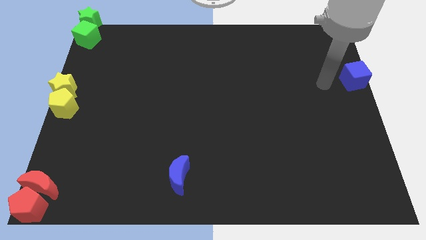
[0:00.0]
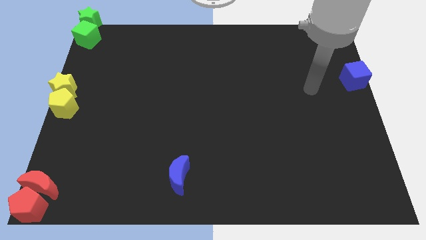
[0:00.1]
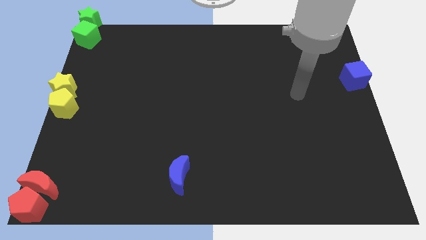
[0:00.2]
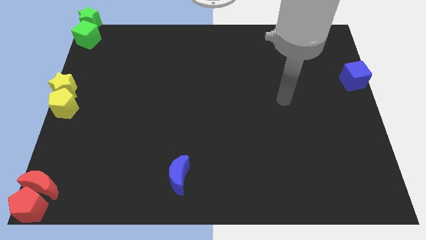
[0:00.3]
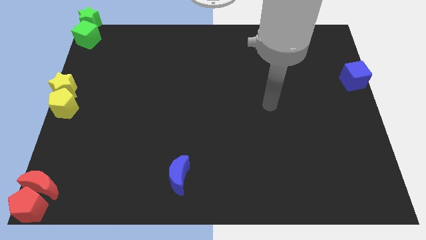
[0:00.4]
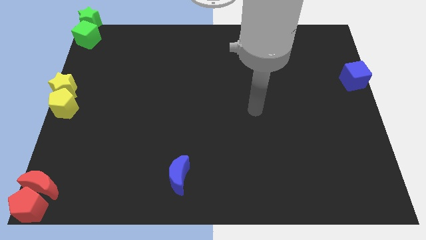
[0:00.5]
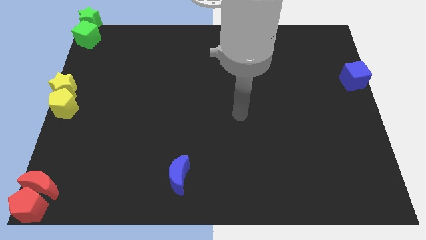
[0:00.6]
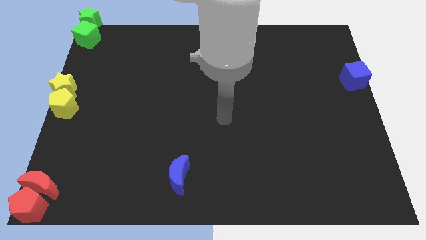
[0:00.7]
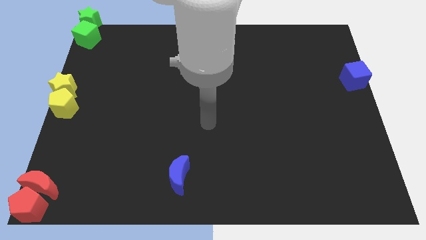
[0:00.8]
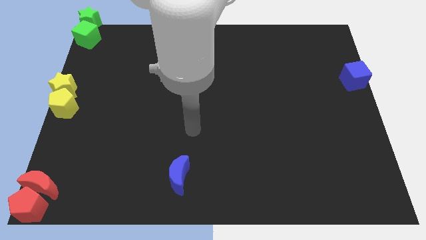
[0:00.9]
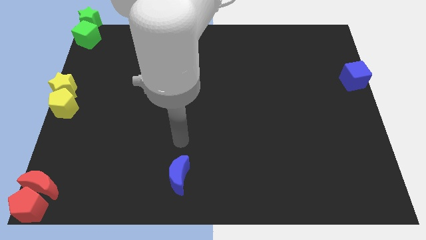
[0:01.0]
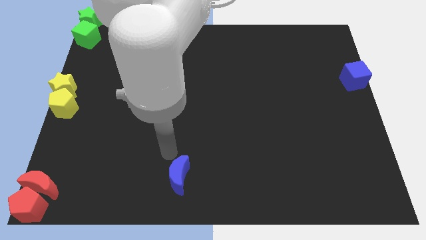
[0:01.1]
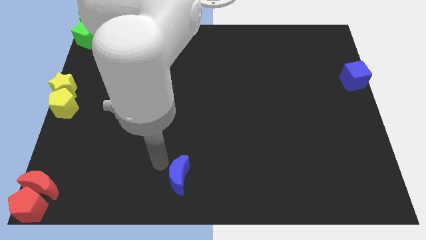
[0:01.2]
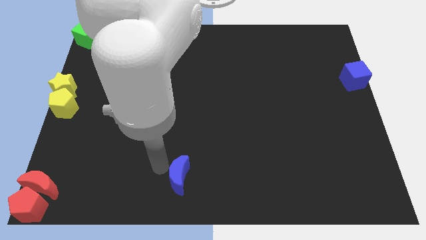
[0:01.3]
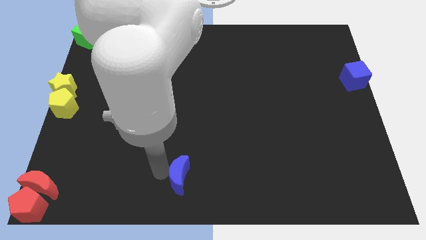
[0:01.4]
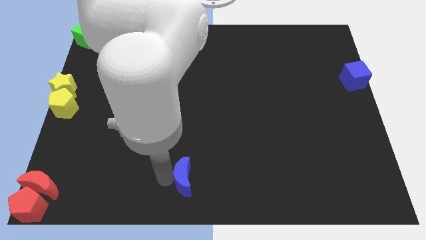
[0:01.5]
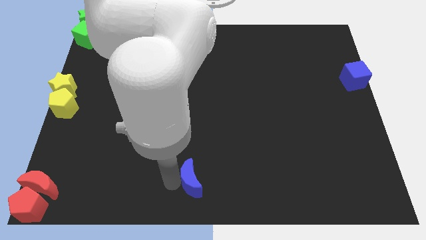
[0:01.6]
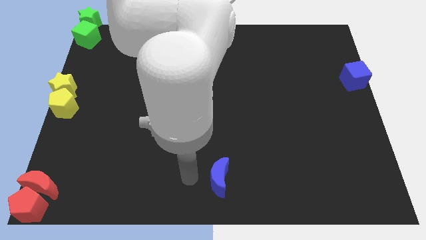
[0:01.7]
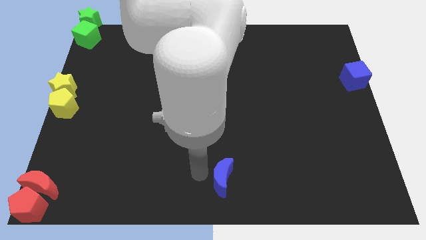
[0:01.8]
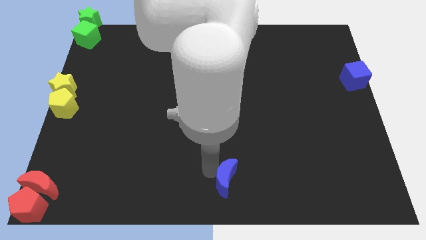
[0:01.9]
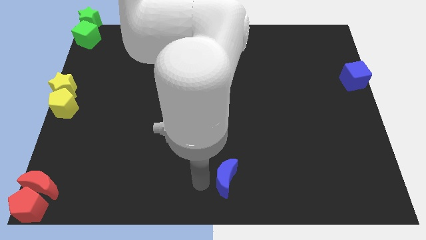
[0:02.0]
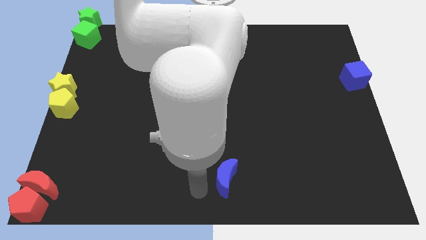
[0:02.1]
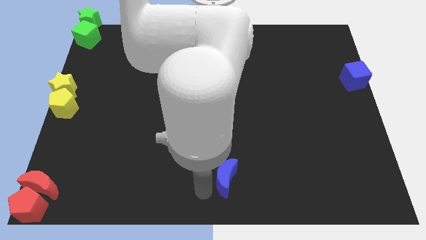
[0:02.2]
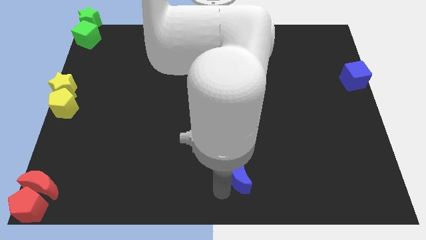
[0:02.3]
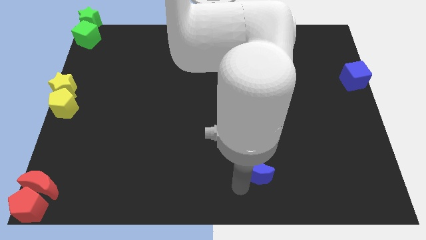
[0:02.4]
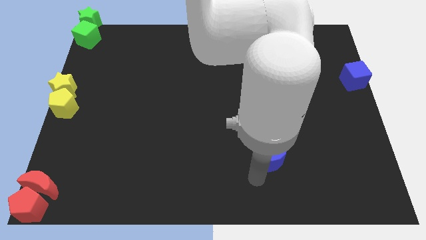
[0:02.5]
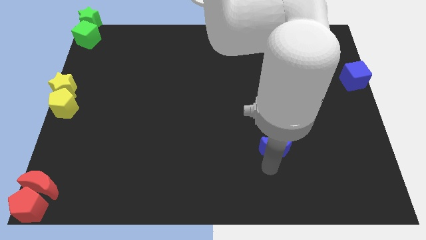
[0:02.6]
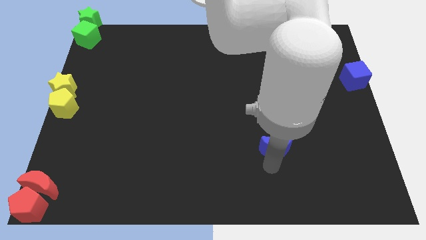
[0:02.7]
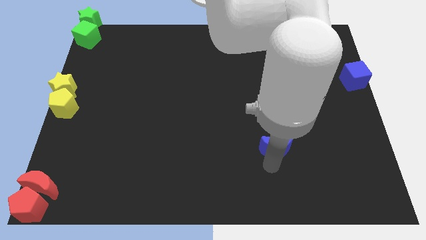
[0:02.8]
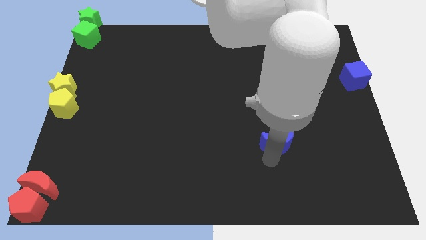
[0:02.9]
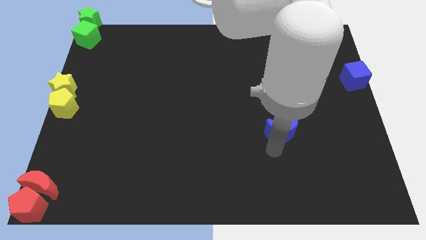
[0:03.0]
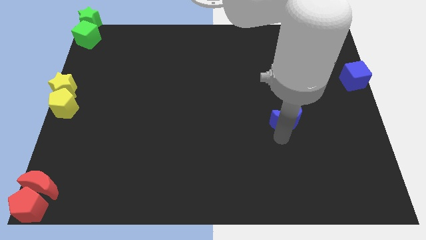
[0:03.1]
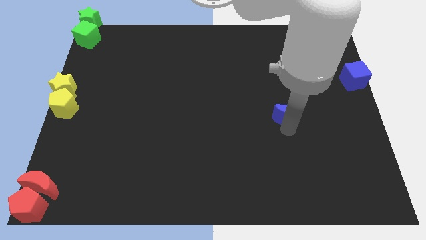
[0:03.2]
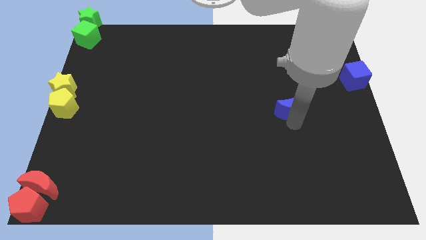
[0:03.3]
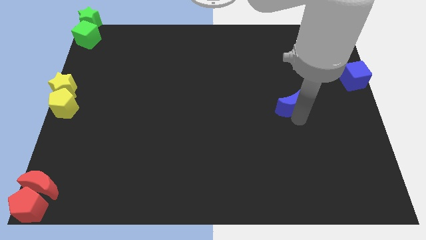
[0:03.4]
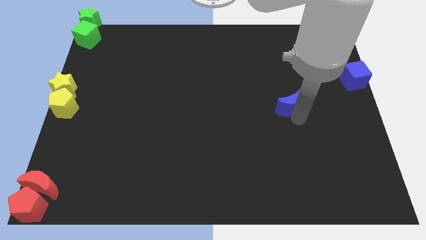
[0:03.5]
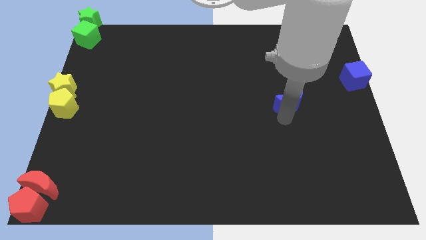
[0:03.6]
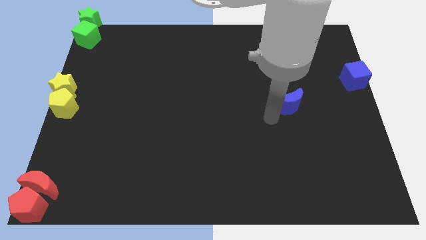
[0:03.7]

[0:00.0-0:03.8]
put the blue crescent diagonally below the bottom left side of the blue cube

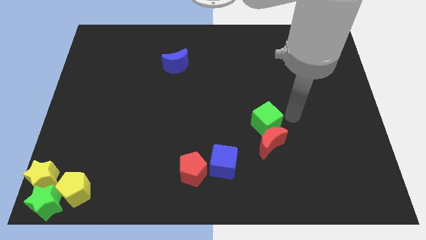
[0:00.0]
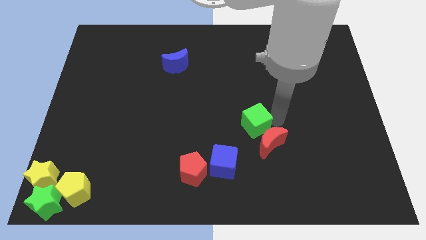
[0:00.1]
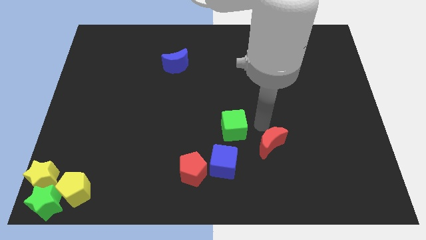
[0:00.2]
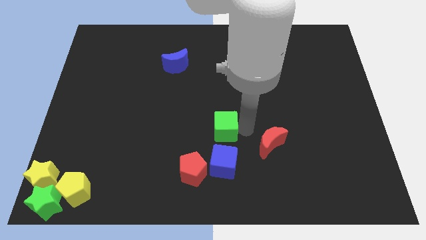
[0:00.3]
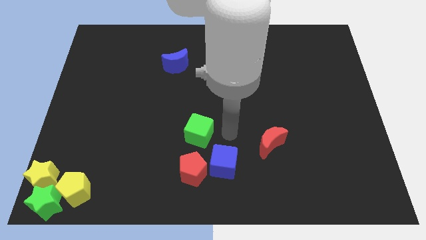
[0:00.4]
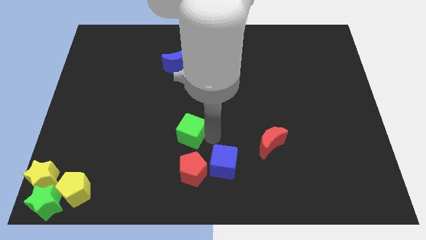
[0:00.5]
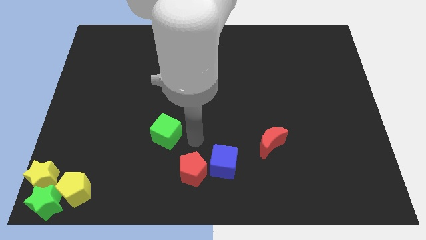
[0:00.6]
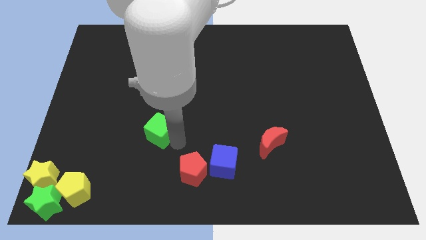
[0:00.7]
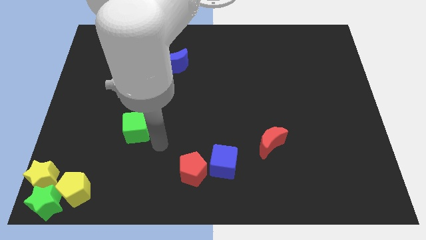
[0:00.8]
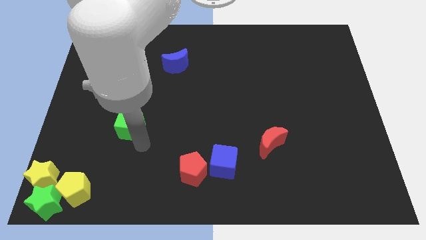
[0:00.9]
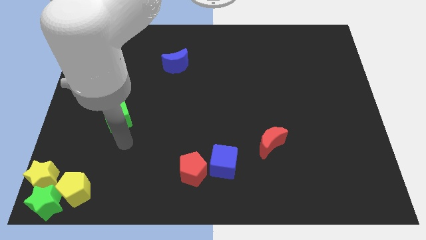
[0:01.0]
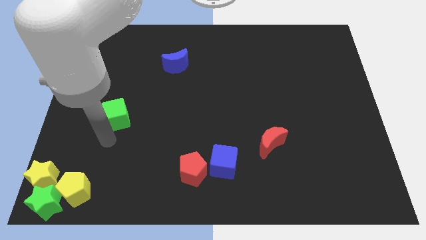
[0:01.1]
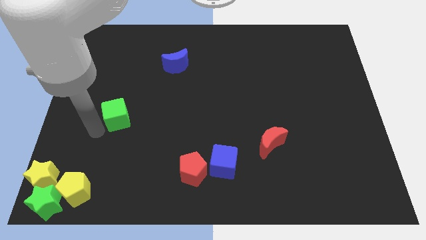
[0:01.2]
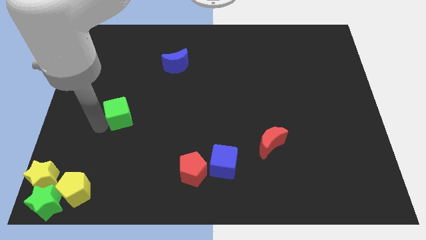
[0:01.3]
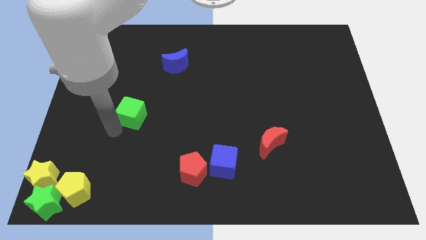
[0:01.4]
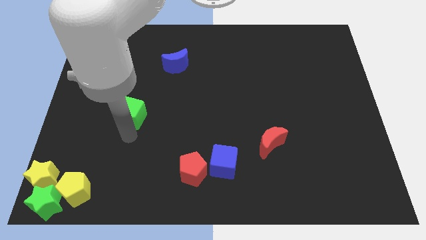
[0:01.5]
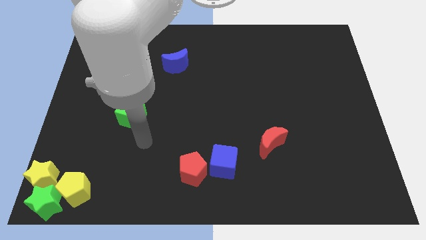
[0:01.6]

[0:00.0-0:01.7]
drag green cube towards left side of the board

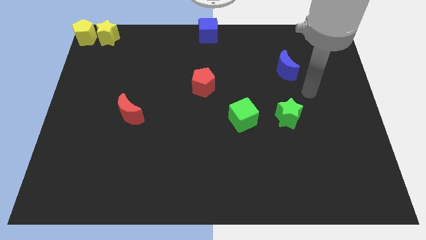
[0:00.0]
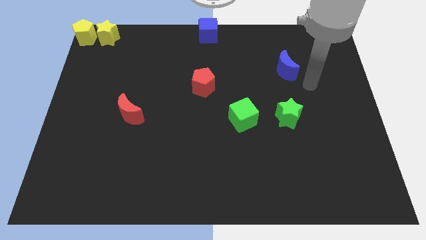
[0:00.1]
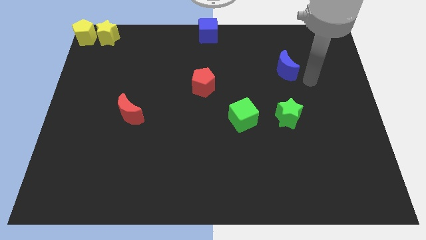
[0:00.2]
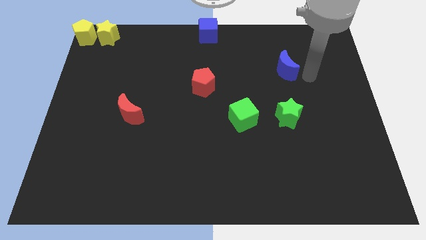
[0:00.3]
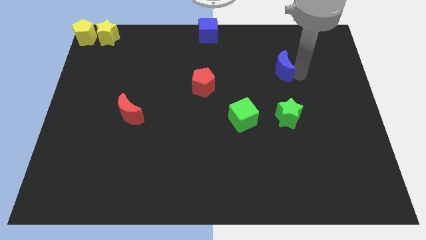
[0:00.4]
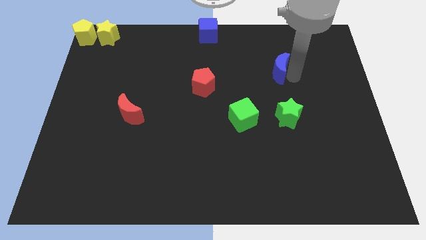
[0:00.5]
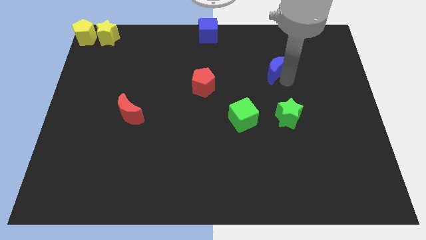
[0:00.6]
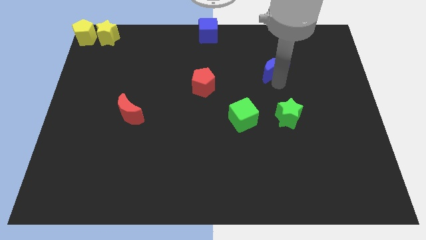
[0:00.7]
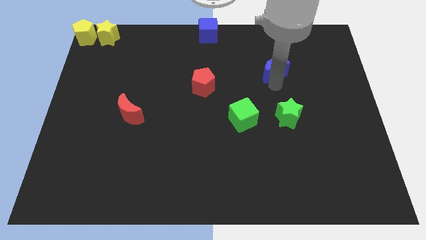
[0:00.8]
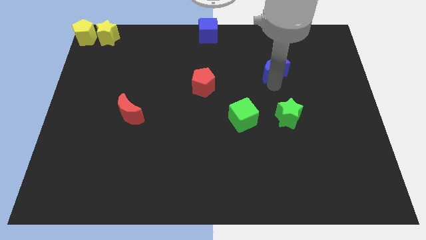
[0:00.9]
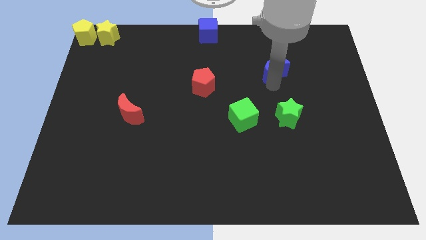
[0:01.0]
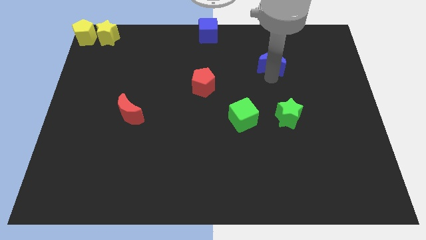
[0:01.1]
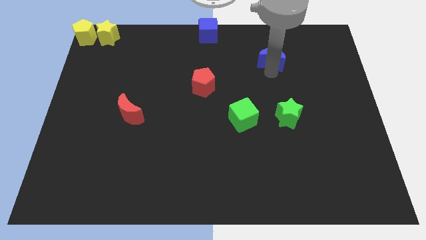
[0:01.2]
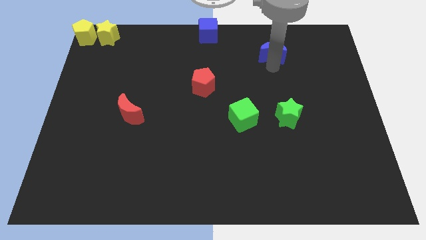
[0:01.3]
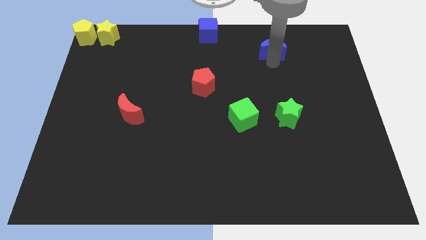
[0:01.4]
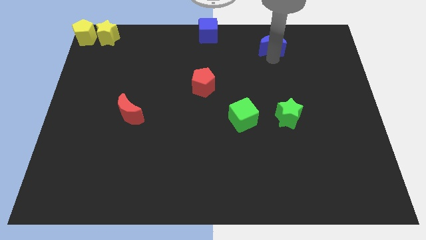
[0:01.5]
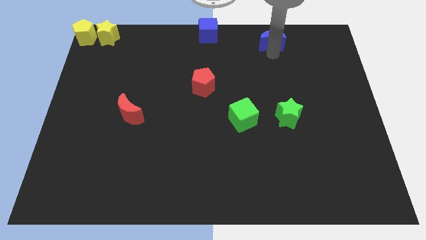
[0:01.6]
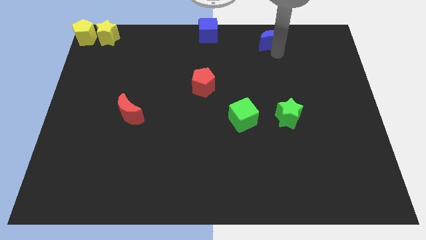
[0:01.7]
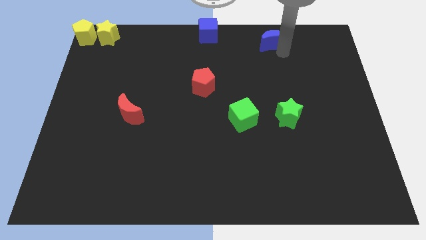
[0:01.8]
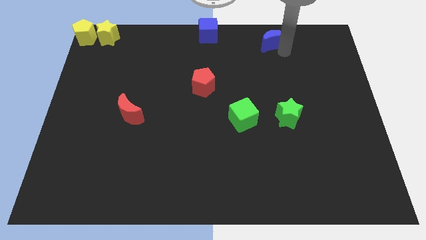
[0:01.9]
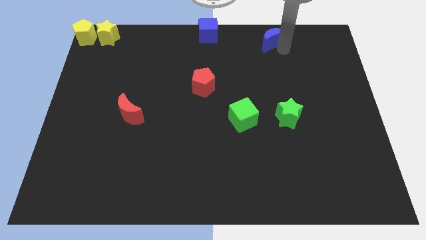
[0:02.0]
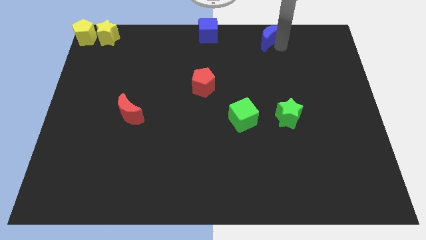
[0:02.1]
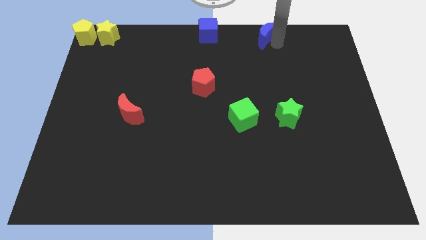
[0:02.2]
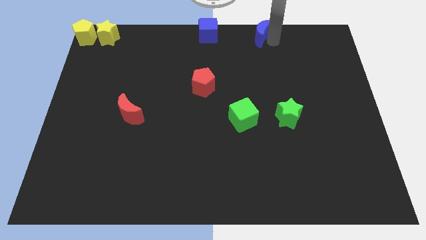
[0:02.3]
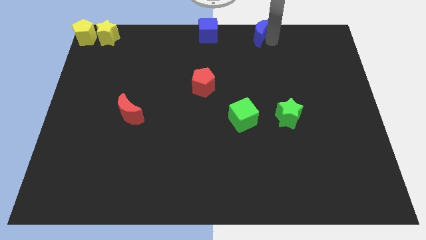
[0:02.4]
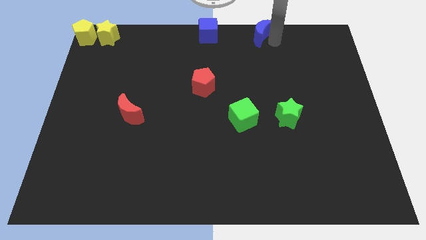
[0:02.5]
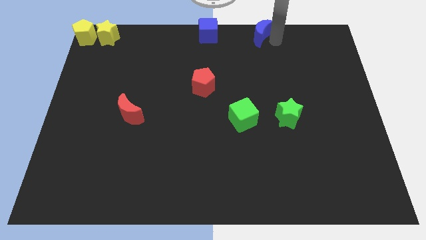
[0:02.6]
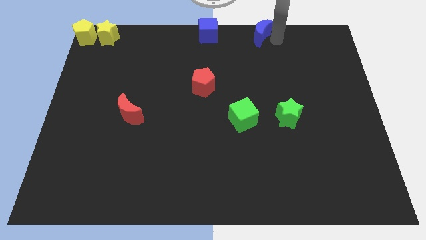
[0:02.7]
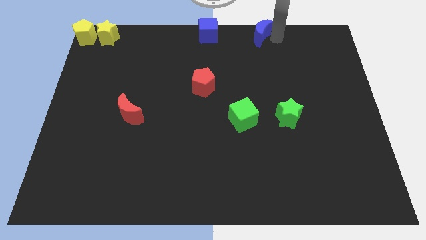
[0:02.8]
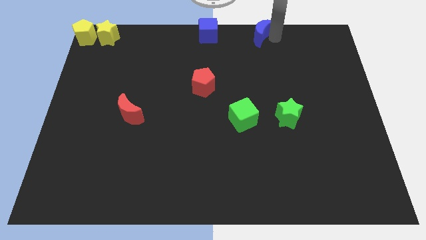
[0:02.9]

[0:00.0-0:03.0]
move the blue moon away from the vertical top of the green star

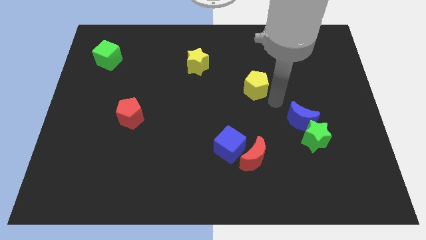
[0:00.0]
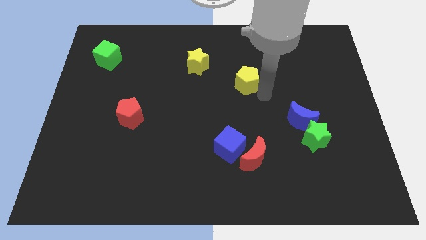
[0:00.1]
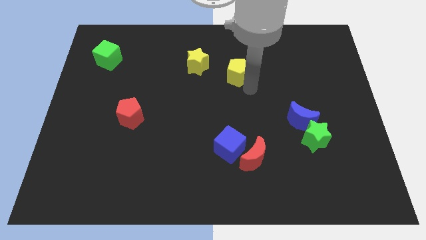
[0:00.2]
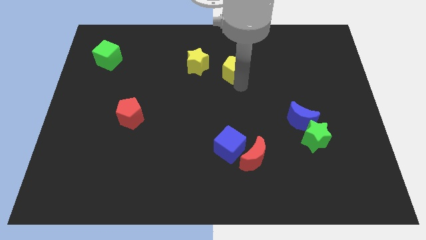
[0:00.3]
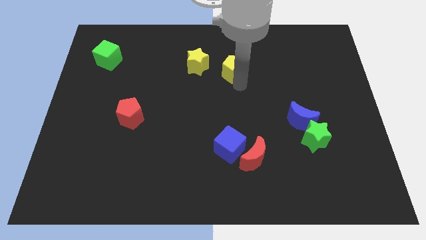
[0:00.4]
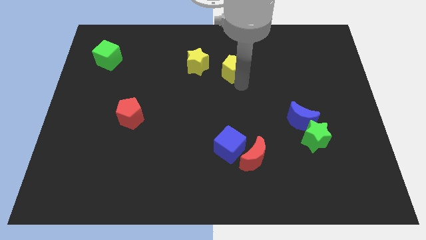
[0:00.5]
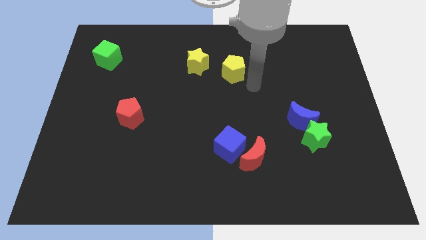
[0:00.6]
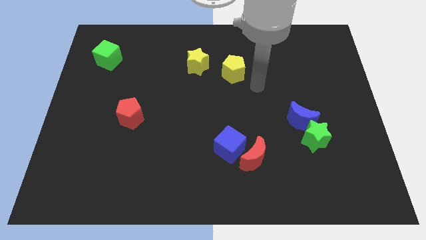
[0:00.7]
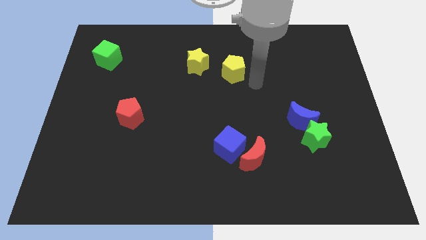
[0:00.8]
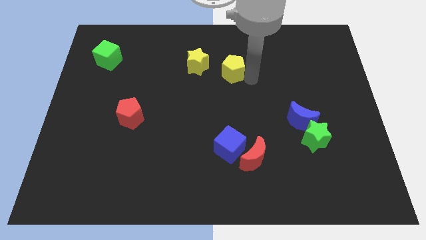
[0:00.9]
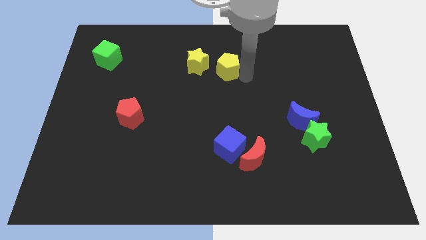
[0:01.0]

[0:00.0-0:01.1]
move yellow pentagon towards yellow star
